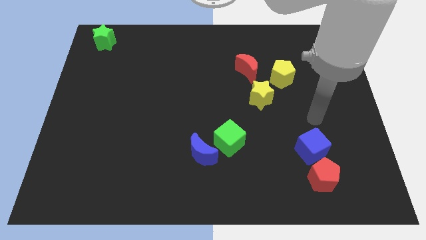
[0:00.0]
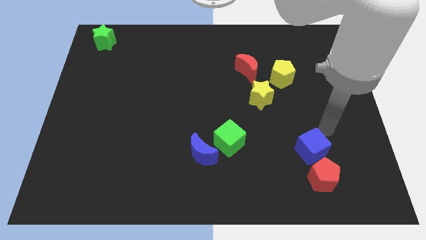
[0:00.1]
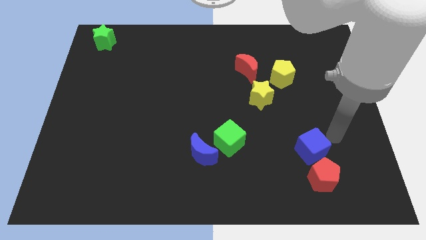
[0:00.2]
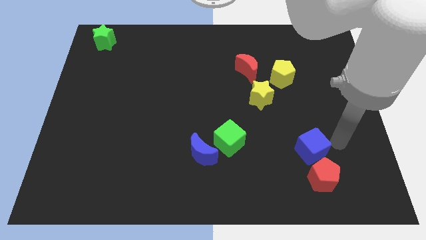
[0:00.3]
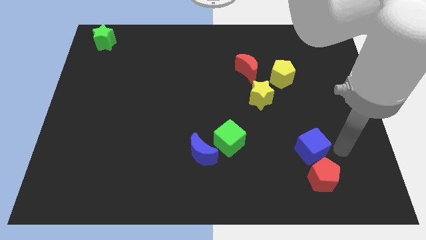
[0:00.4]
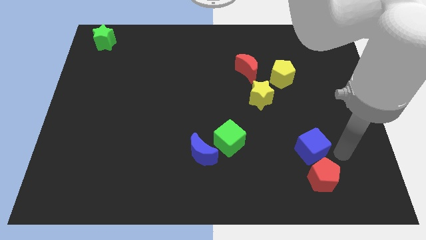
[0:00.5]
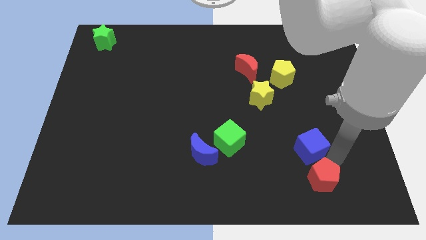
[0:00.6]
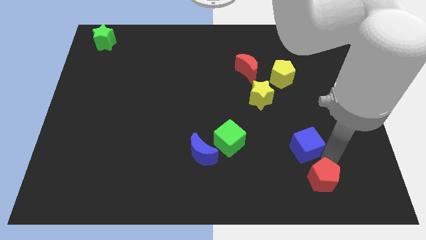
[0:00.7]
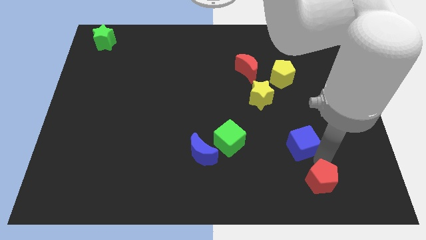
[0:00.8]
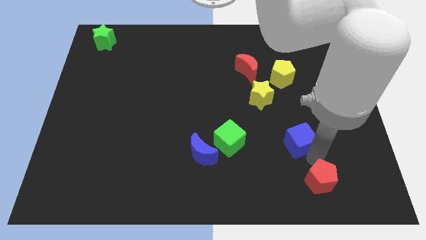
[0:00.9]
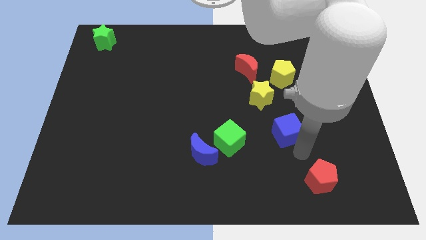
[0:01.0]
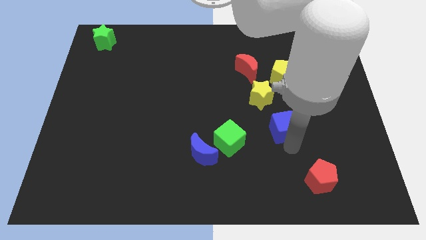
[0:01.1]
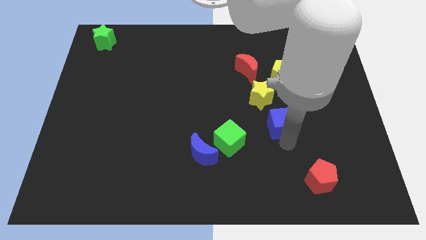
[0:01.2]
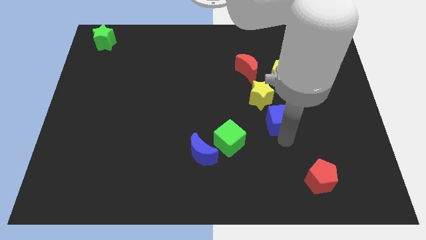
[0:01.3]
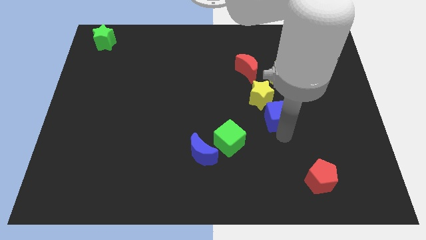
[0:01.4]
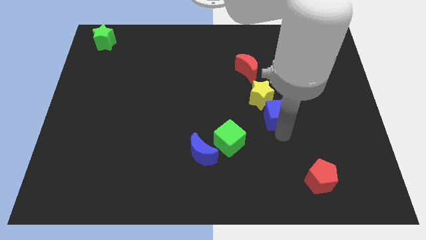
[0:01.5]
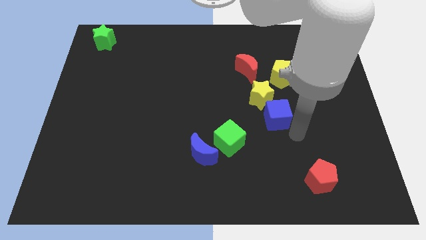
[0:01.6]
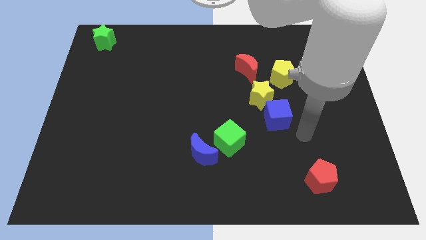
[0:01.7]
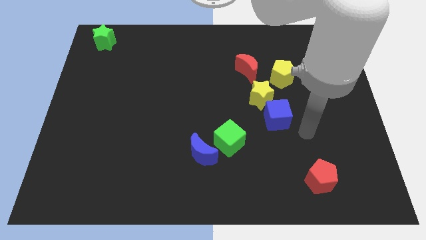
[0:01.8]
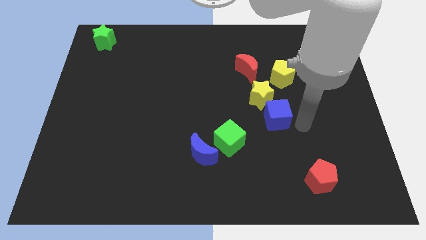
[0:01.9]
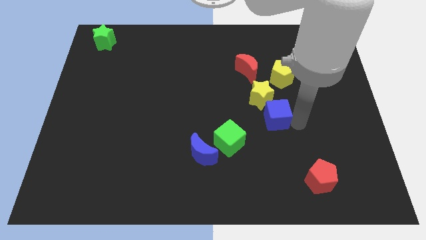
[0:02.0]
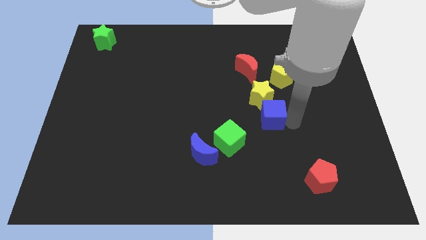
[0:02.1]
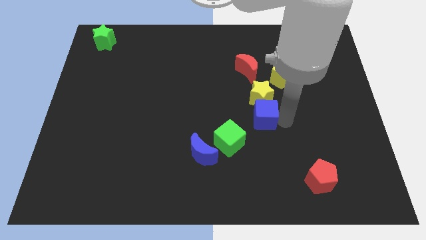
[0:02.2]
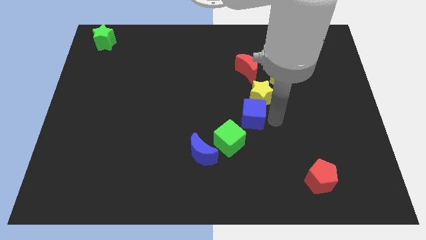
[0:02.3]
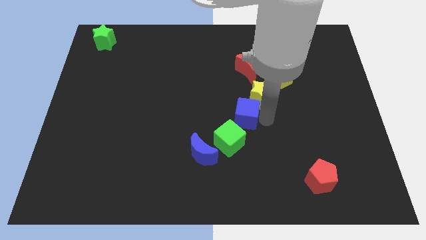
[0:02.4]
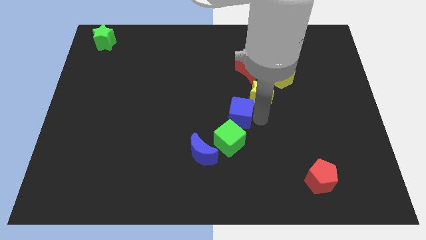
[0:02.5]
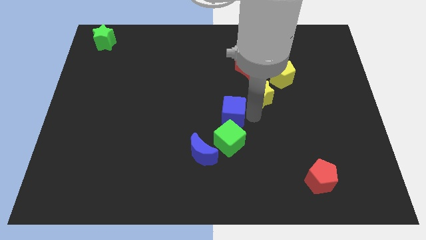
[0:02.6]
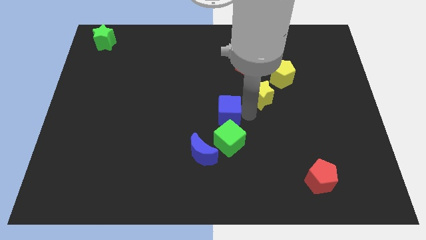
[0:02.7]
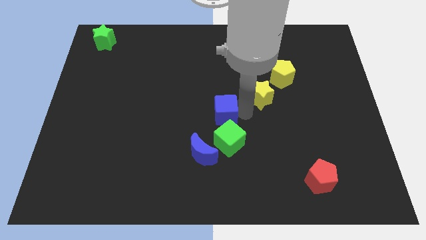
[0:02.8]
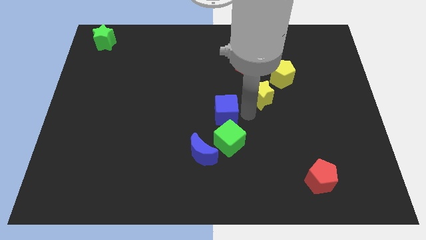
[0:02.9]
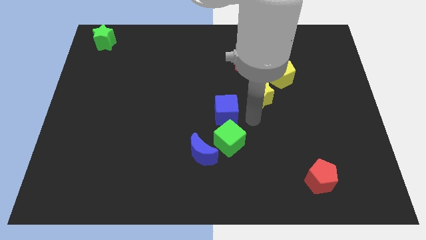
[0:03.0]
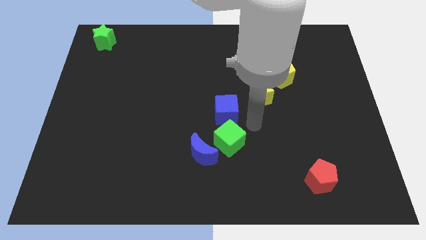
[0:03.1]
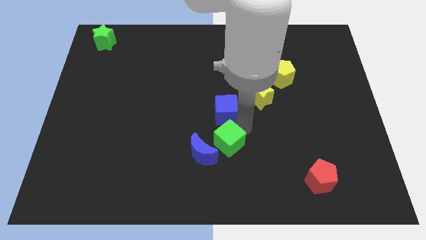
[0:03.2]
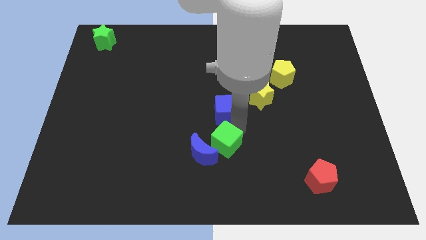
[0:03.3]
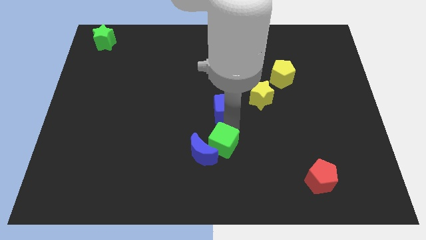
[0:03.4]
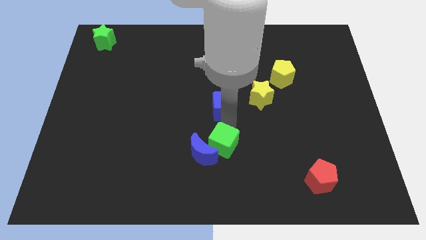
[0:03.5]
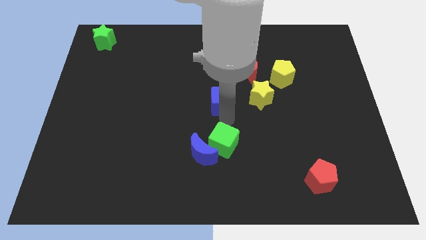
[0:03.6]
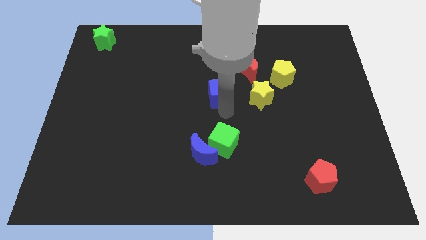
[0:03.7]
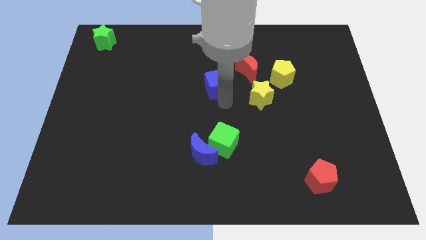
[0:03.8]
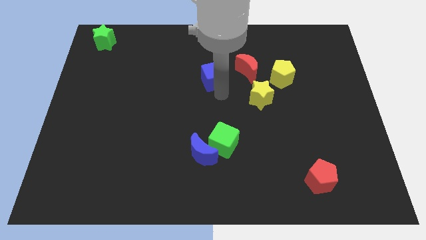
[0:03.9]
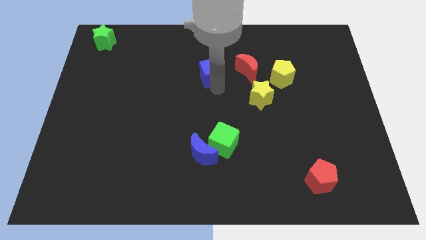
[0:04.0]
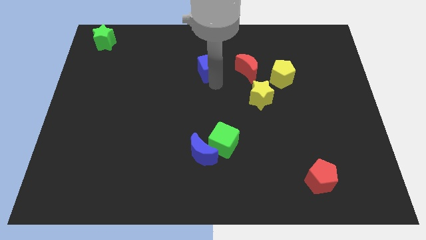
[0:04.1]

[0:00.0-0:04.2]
put the blue cube to the left of the red crescent

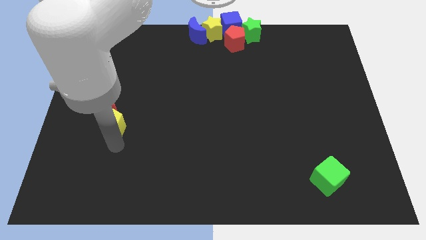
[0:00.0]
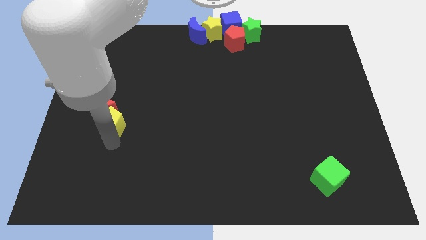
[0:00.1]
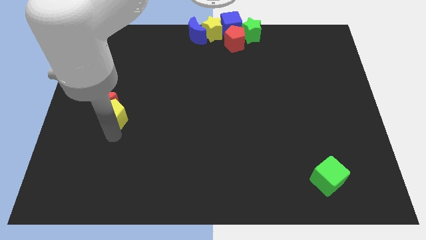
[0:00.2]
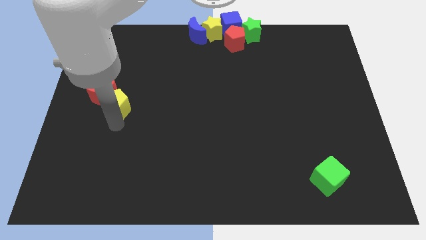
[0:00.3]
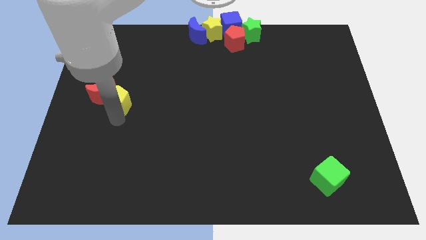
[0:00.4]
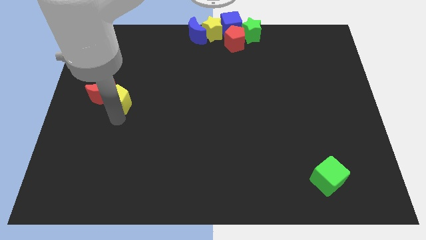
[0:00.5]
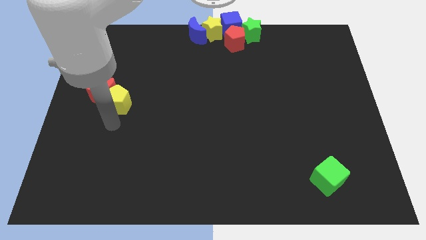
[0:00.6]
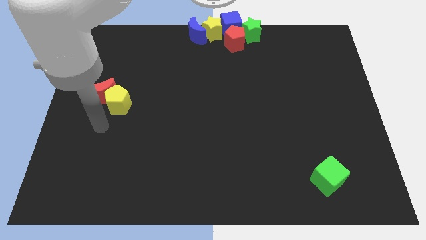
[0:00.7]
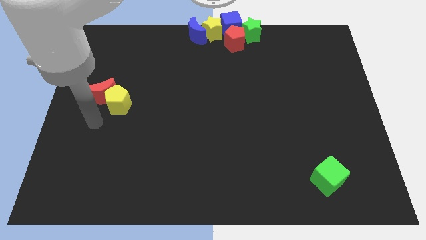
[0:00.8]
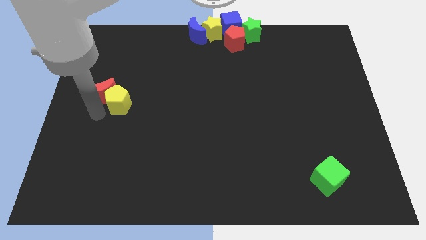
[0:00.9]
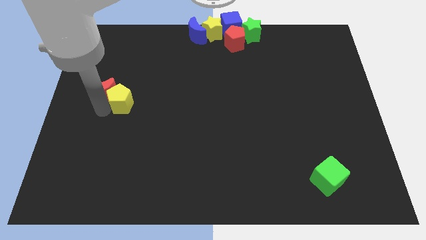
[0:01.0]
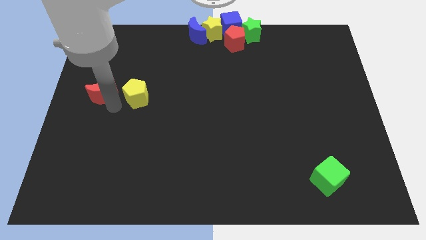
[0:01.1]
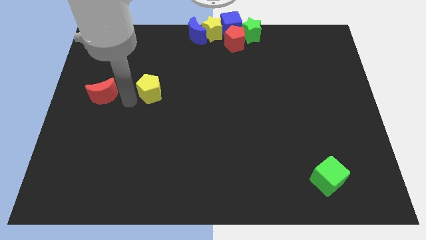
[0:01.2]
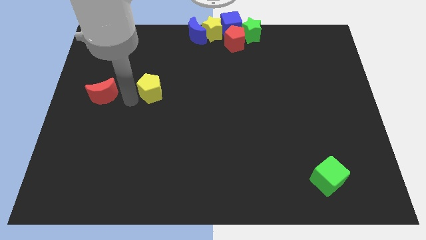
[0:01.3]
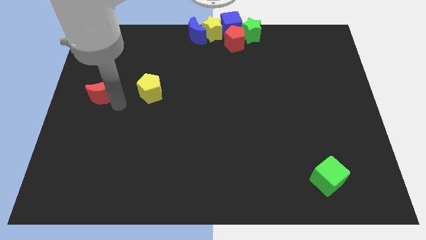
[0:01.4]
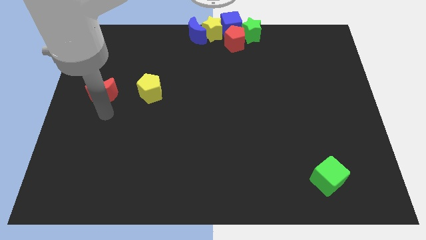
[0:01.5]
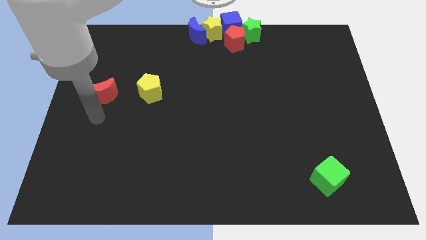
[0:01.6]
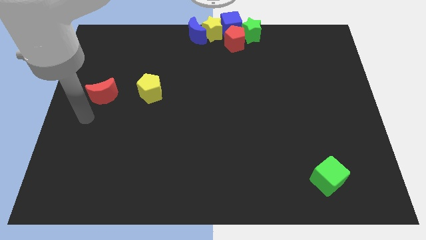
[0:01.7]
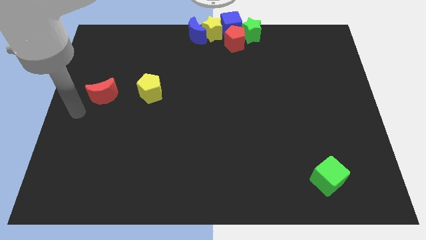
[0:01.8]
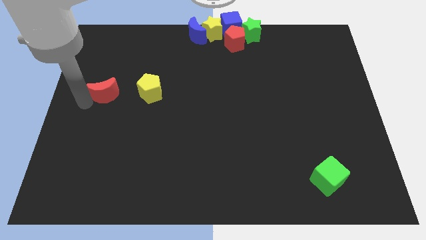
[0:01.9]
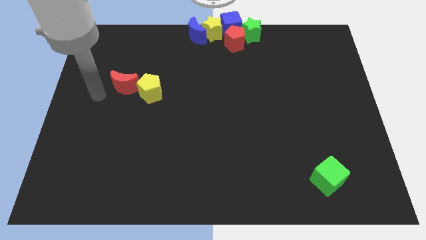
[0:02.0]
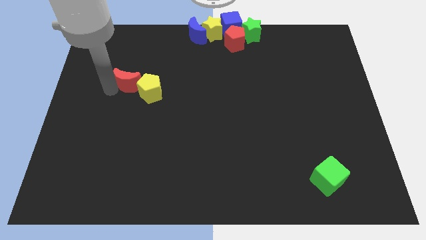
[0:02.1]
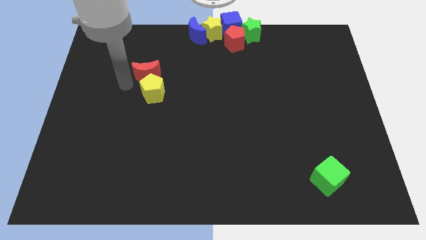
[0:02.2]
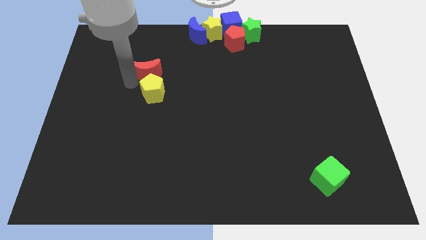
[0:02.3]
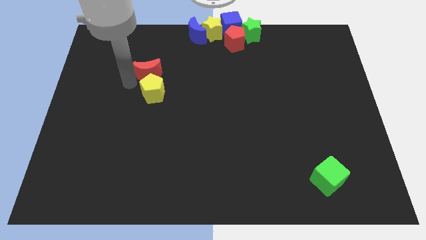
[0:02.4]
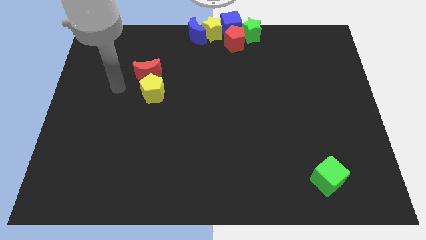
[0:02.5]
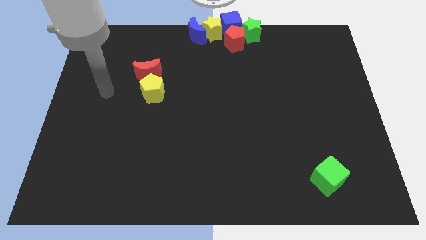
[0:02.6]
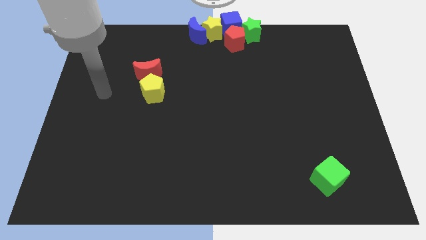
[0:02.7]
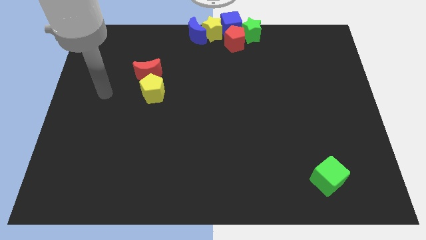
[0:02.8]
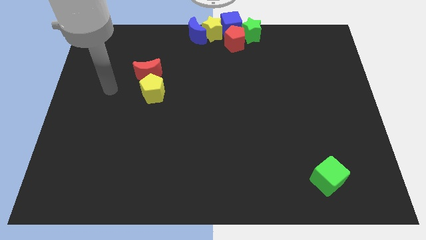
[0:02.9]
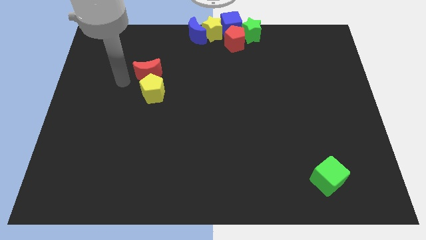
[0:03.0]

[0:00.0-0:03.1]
move the yellow pentagon along with red crescent towards the top

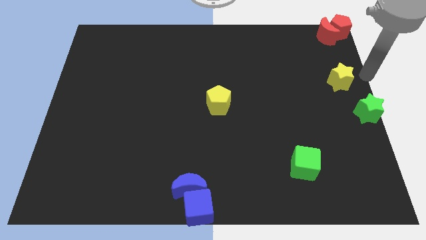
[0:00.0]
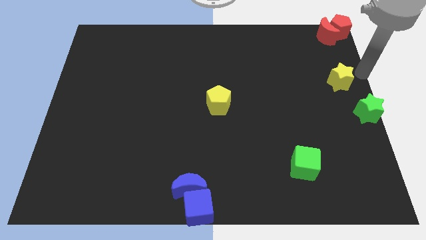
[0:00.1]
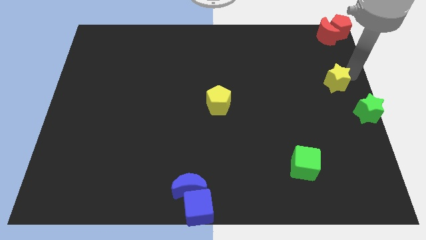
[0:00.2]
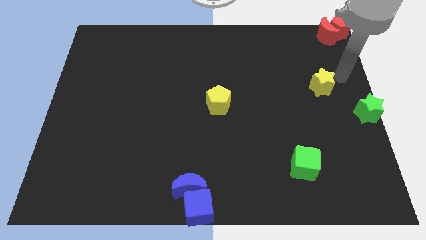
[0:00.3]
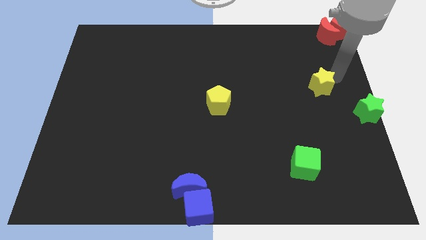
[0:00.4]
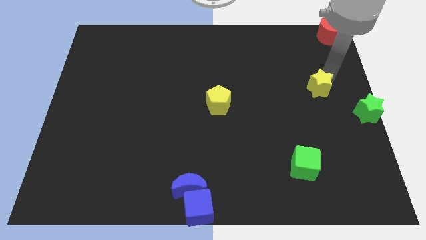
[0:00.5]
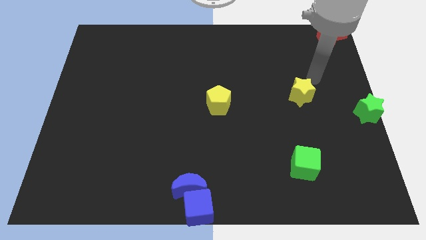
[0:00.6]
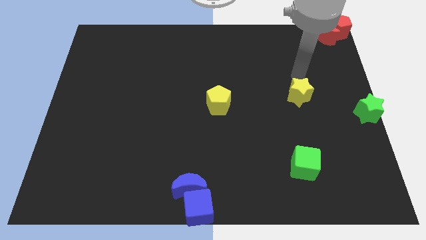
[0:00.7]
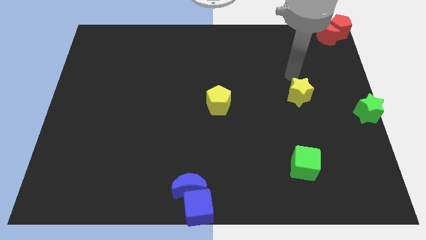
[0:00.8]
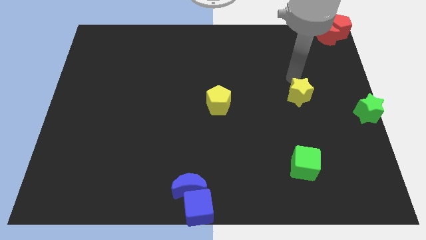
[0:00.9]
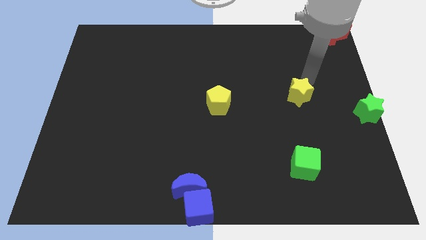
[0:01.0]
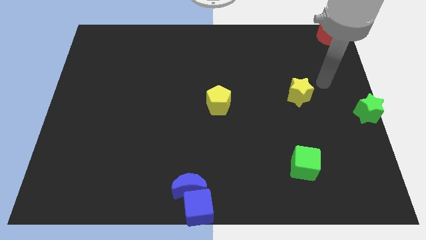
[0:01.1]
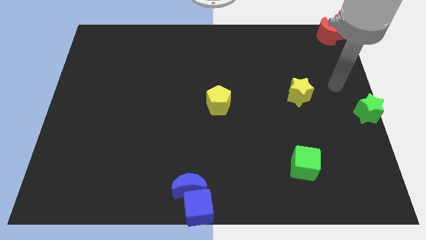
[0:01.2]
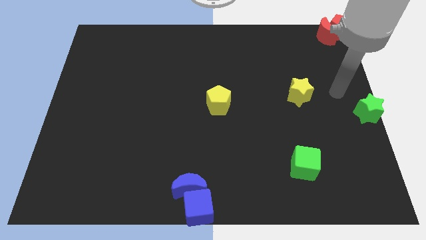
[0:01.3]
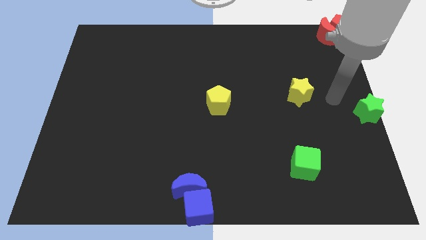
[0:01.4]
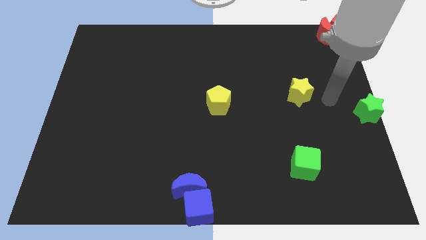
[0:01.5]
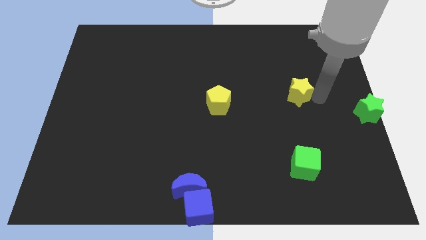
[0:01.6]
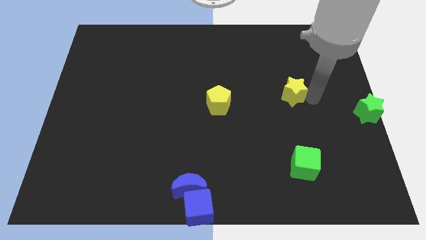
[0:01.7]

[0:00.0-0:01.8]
slightly move the yellow star parallel to the right of the yellow pentagon

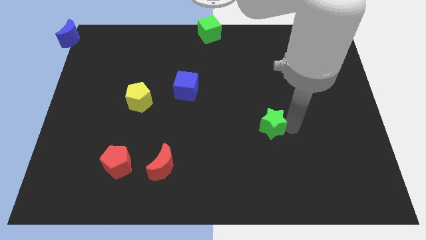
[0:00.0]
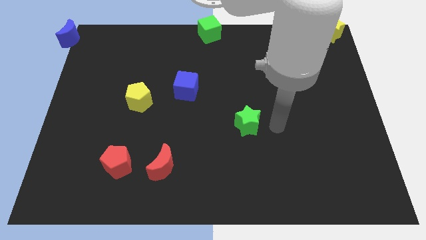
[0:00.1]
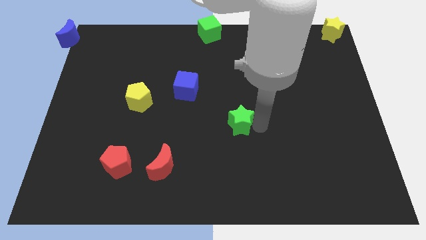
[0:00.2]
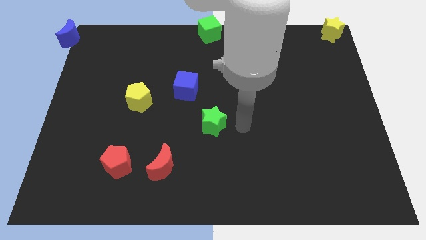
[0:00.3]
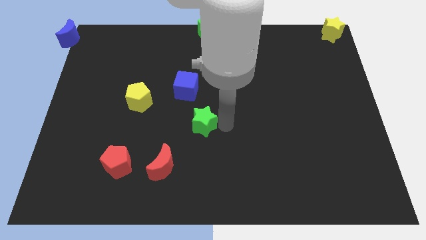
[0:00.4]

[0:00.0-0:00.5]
move the green star to the middle of the board
